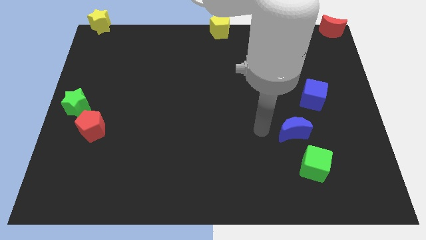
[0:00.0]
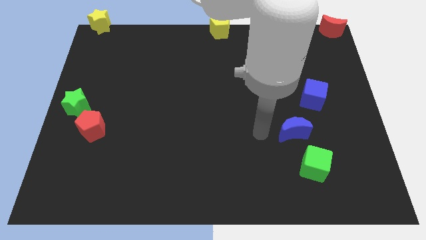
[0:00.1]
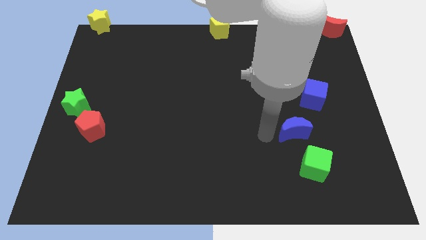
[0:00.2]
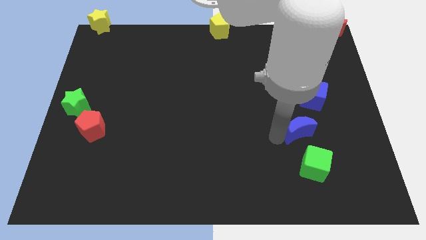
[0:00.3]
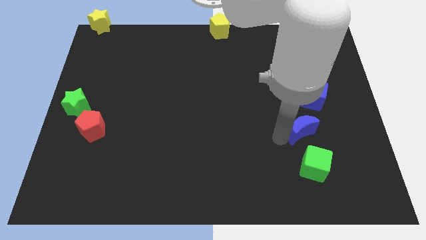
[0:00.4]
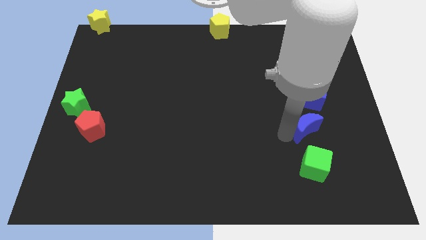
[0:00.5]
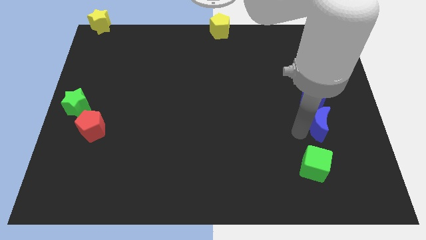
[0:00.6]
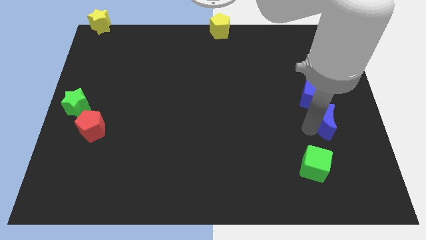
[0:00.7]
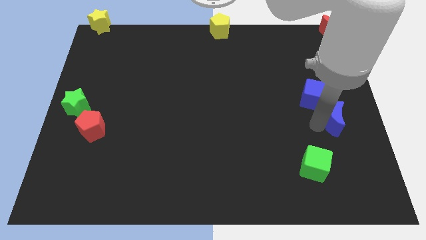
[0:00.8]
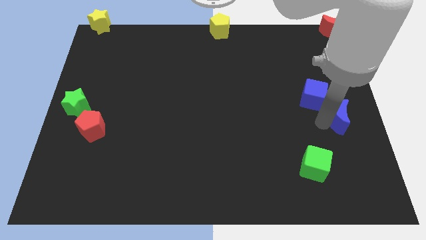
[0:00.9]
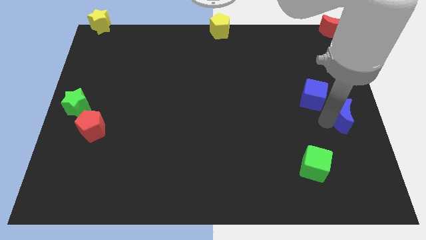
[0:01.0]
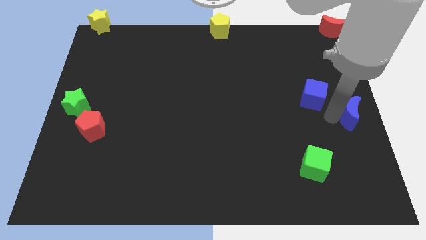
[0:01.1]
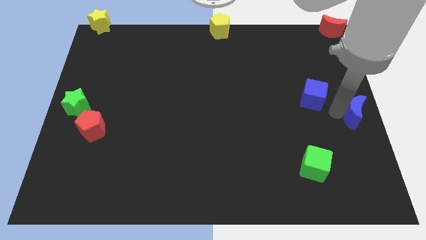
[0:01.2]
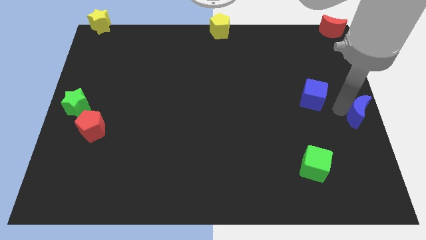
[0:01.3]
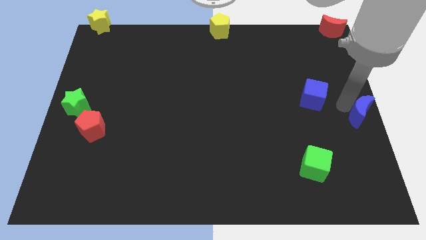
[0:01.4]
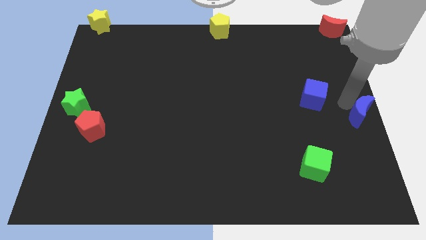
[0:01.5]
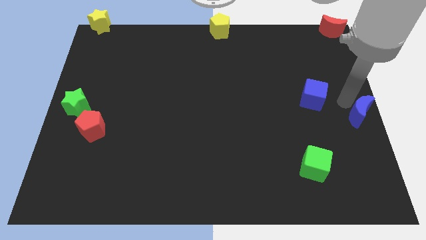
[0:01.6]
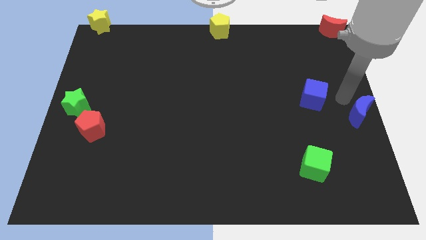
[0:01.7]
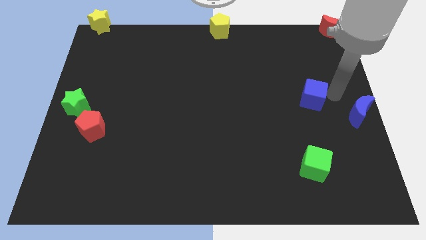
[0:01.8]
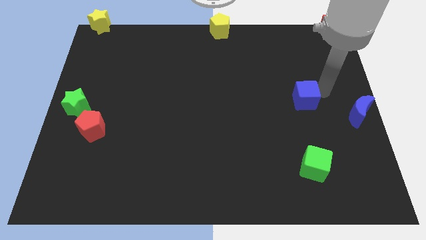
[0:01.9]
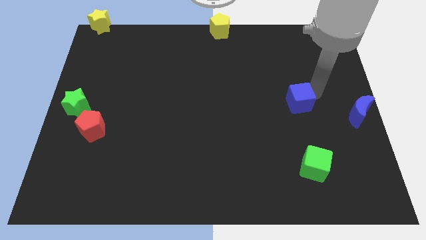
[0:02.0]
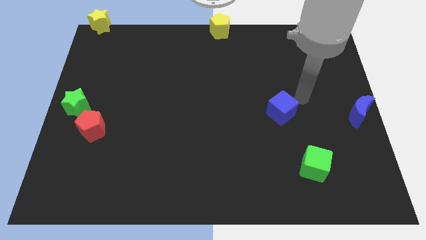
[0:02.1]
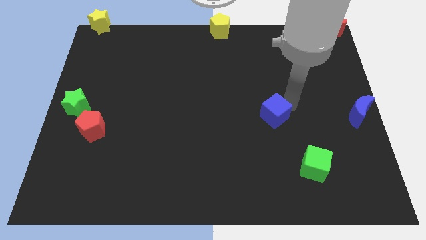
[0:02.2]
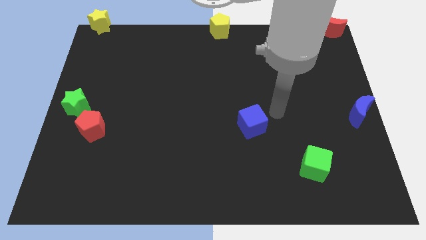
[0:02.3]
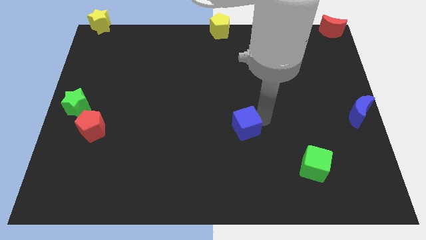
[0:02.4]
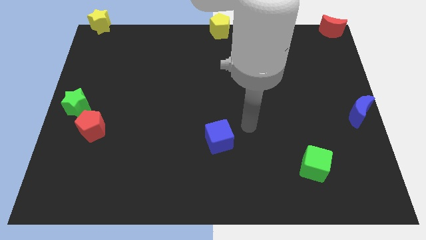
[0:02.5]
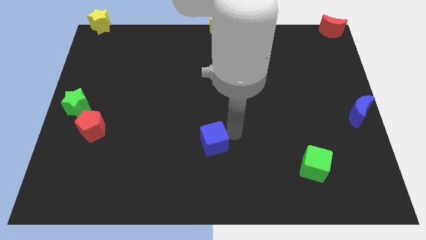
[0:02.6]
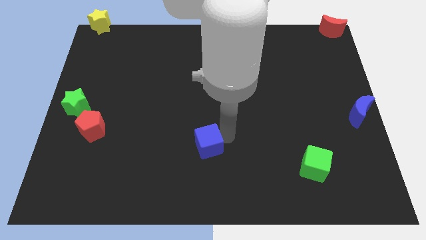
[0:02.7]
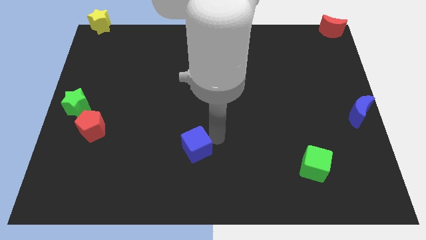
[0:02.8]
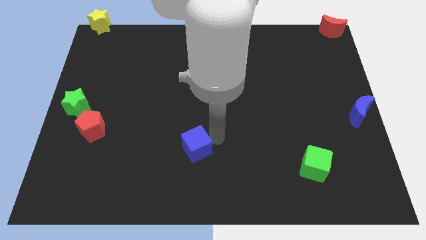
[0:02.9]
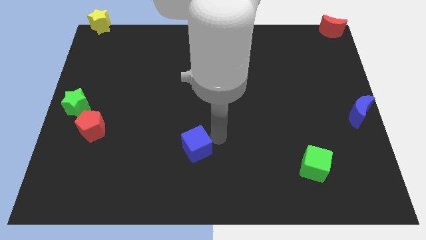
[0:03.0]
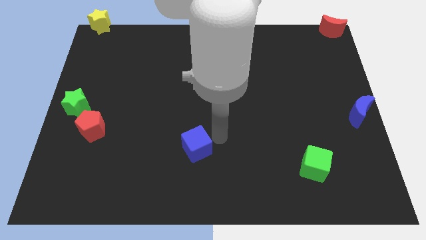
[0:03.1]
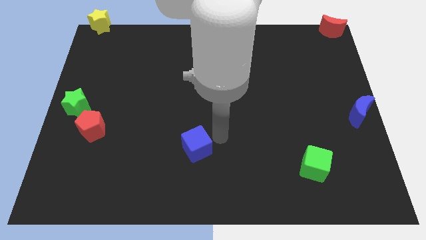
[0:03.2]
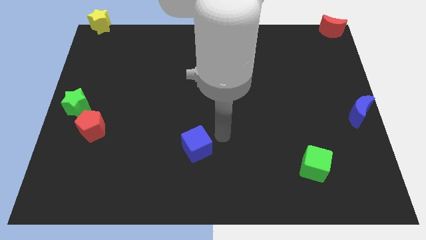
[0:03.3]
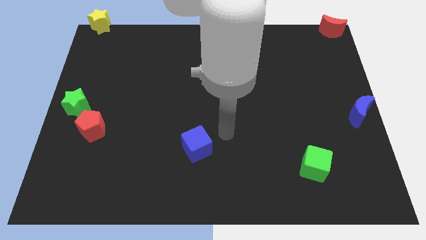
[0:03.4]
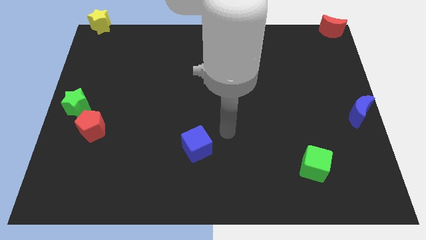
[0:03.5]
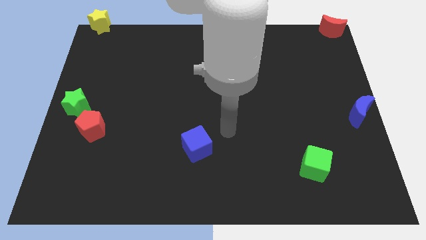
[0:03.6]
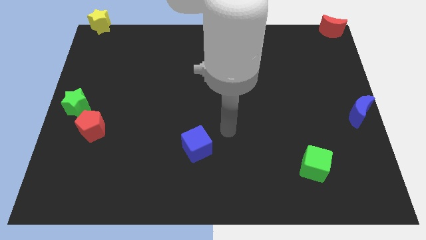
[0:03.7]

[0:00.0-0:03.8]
separate blue cube away from blue moon

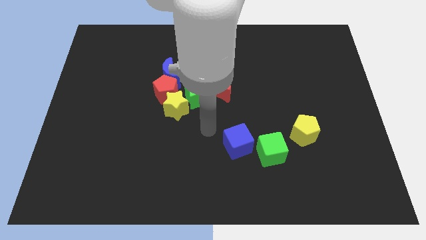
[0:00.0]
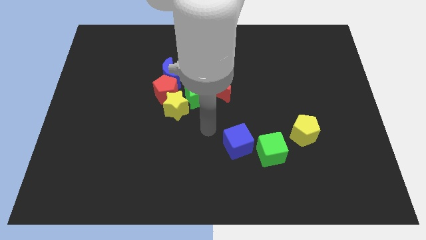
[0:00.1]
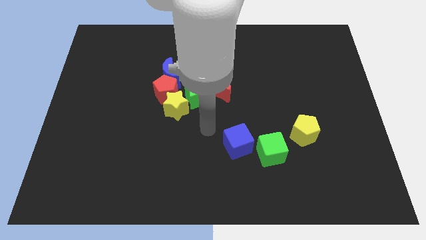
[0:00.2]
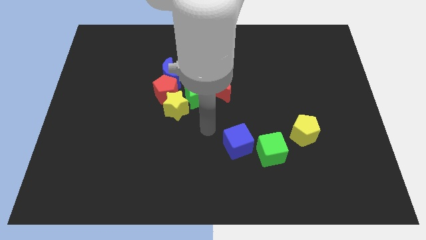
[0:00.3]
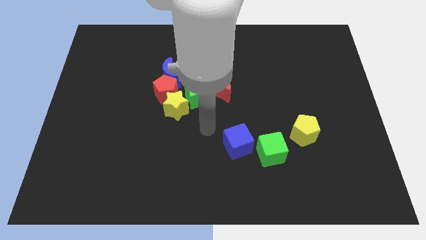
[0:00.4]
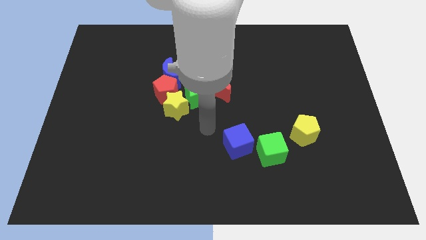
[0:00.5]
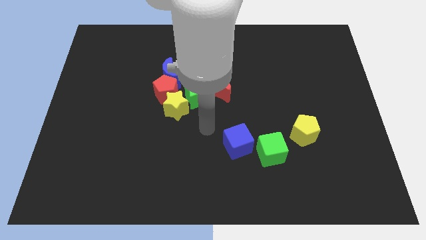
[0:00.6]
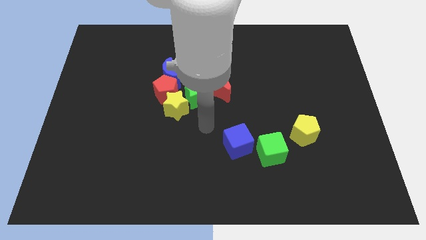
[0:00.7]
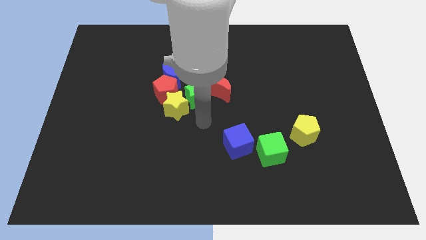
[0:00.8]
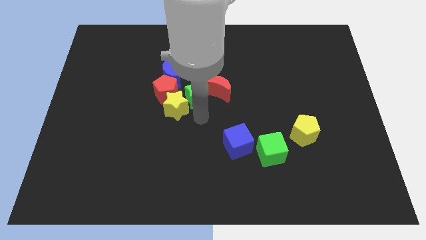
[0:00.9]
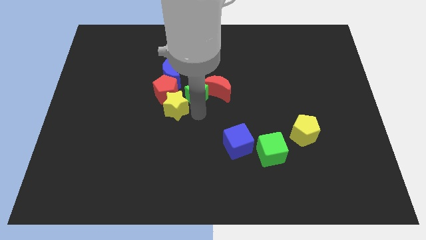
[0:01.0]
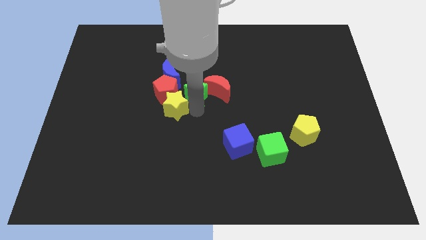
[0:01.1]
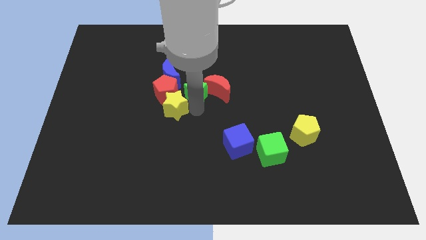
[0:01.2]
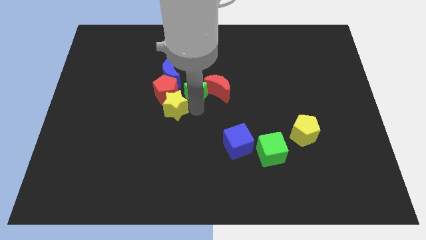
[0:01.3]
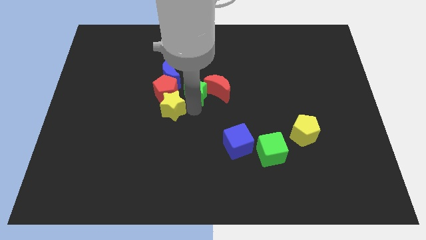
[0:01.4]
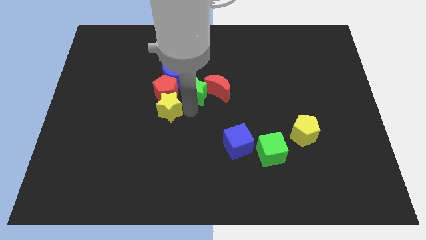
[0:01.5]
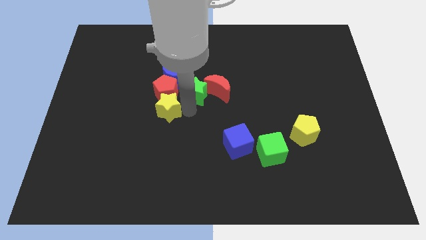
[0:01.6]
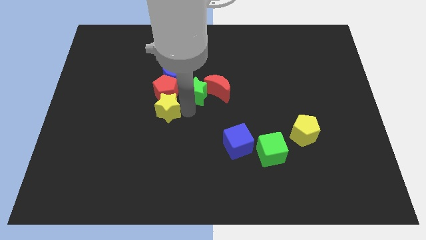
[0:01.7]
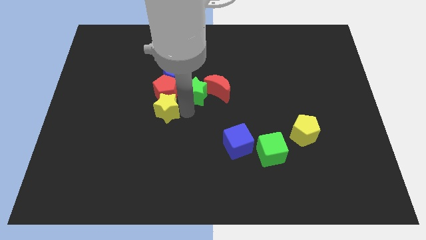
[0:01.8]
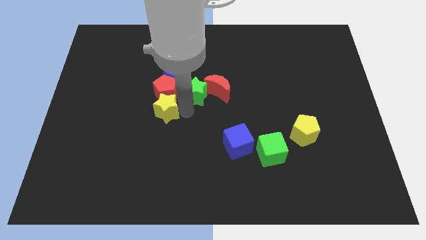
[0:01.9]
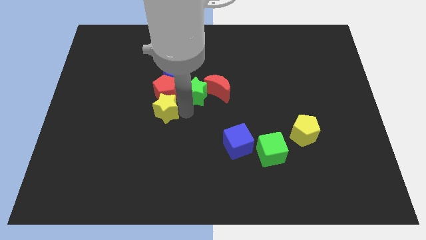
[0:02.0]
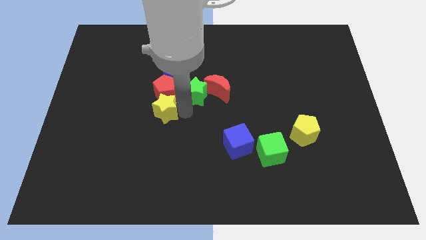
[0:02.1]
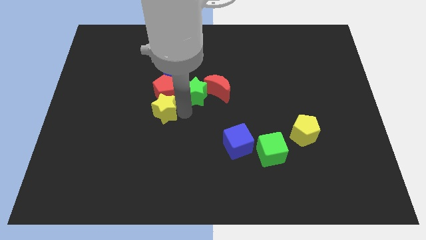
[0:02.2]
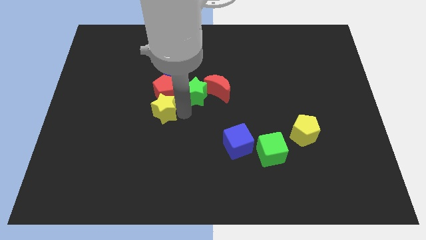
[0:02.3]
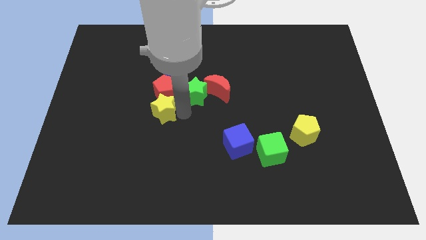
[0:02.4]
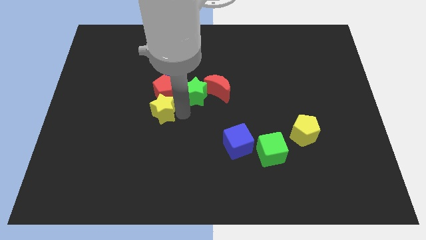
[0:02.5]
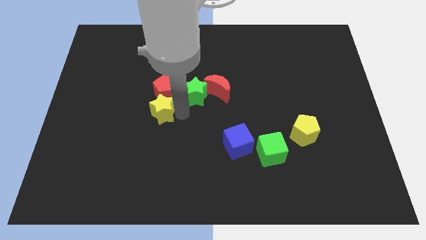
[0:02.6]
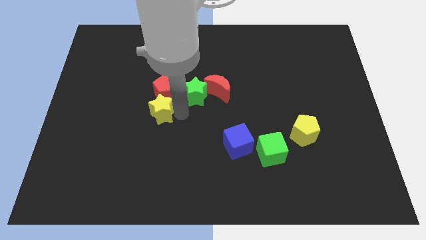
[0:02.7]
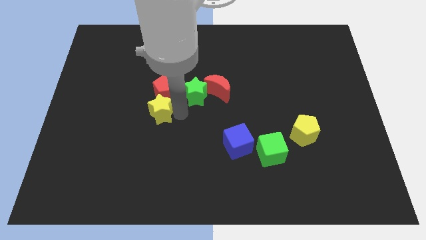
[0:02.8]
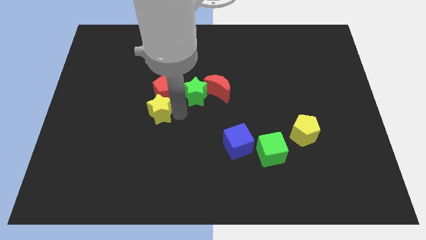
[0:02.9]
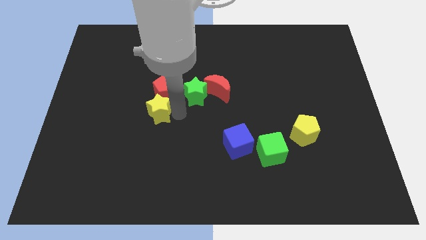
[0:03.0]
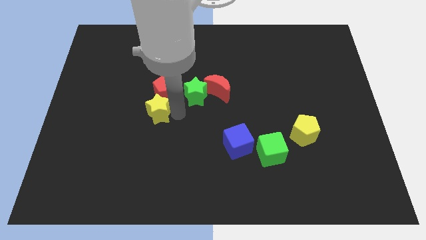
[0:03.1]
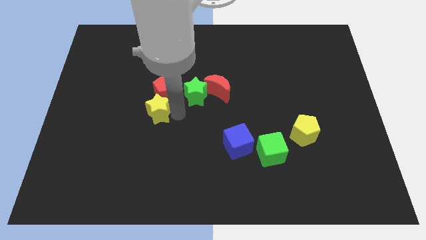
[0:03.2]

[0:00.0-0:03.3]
separate the green star and yellow star

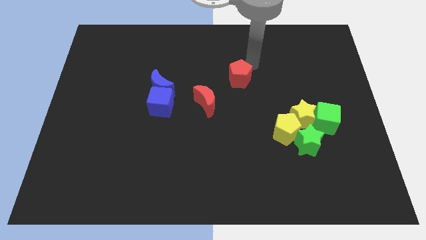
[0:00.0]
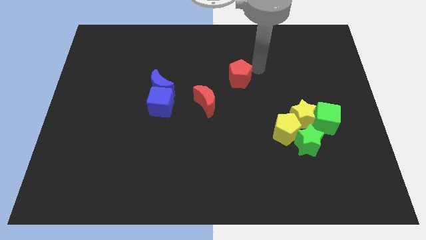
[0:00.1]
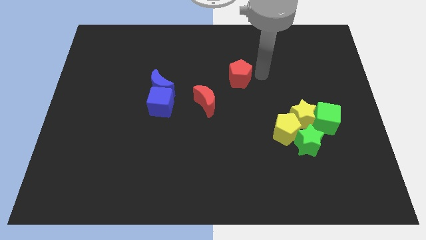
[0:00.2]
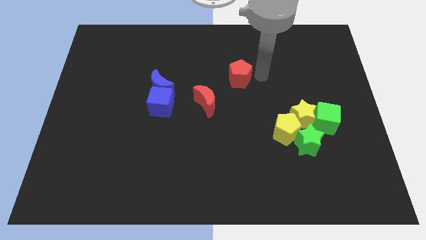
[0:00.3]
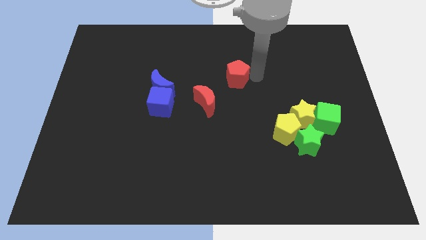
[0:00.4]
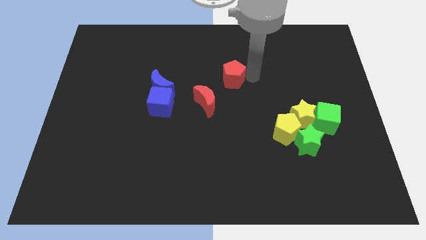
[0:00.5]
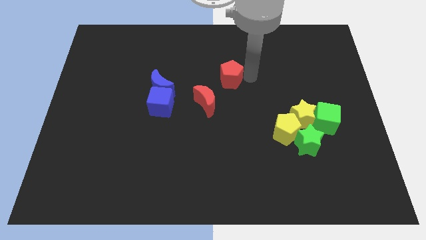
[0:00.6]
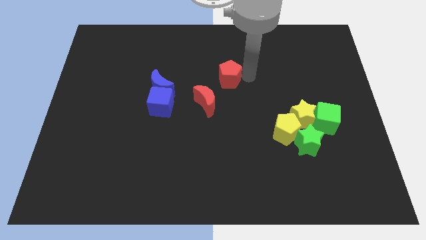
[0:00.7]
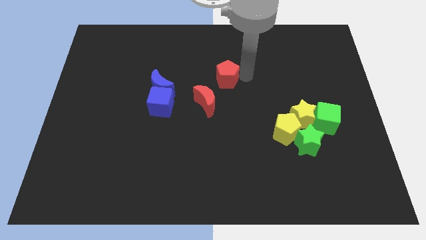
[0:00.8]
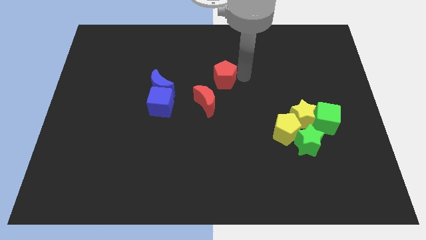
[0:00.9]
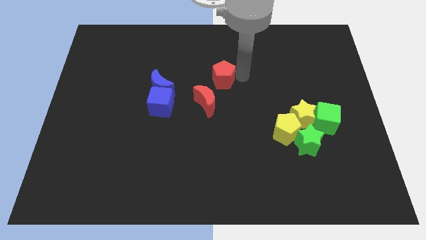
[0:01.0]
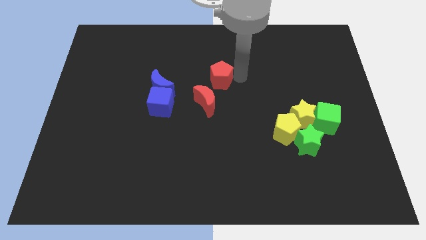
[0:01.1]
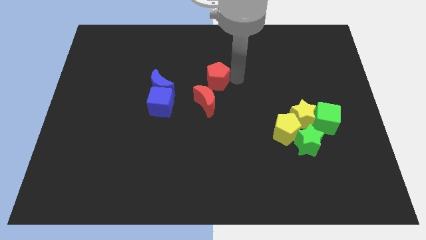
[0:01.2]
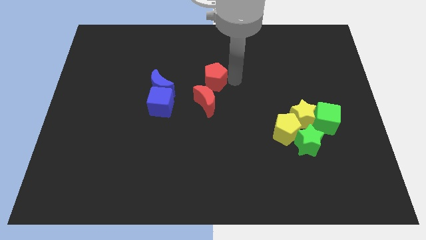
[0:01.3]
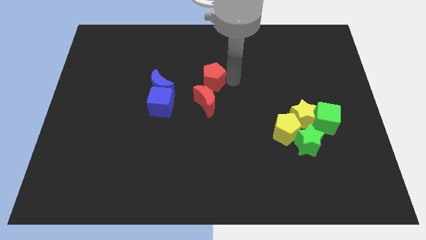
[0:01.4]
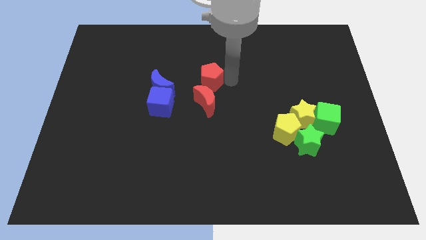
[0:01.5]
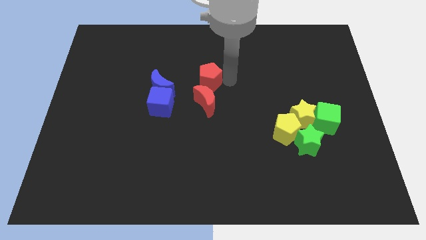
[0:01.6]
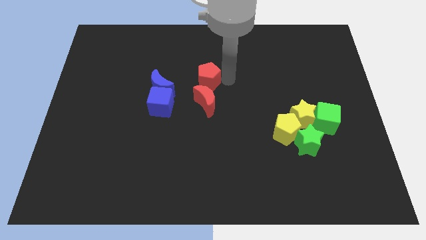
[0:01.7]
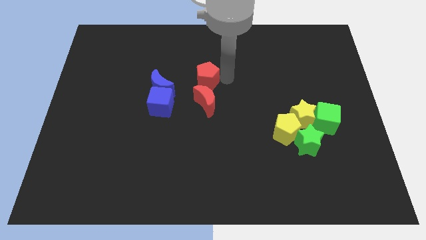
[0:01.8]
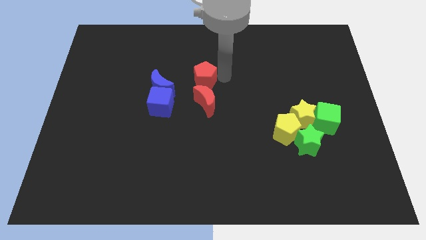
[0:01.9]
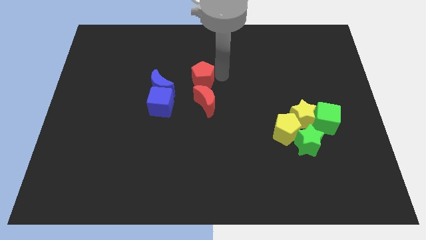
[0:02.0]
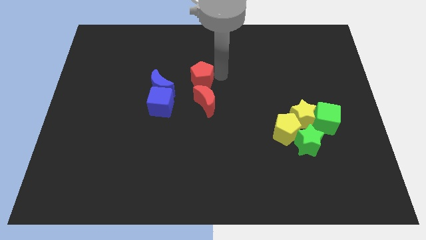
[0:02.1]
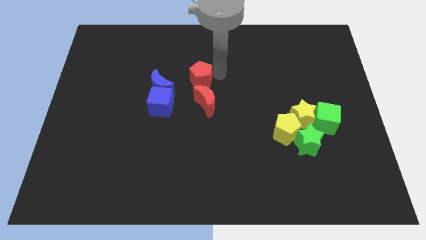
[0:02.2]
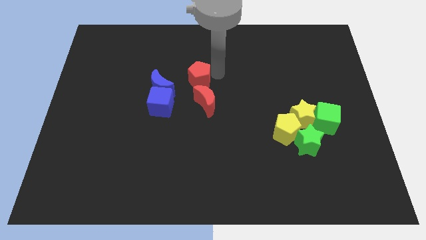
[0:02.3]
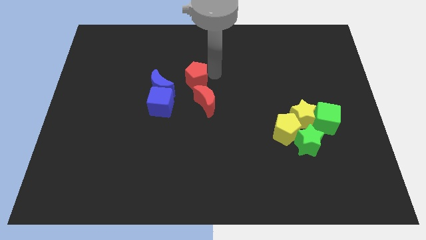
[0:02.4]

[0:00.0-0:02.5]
move the red pentagon towards the right side of blue moon
